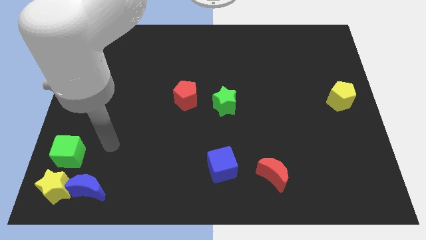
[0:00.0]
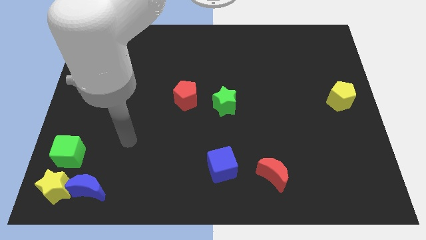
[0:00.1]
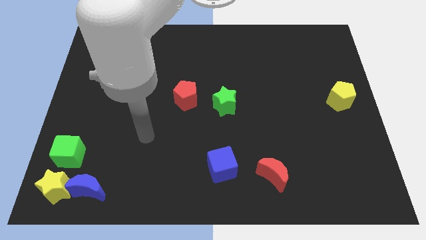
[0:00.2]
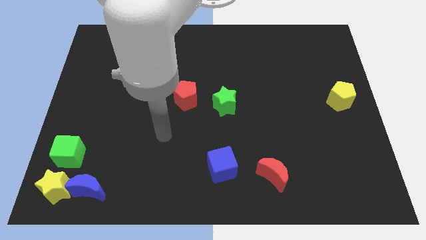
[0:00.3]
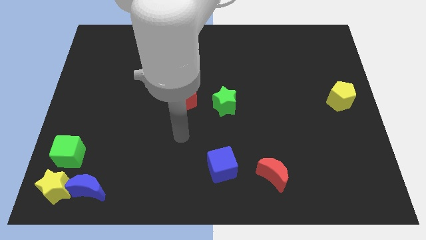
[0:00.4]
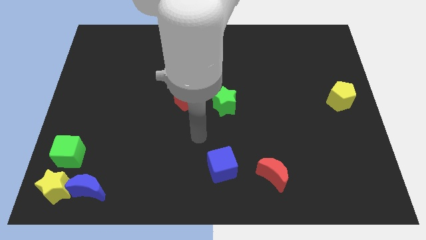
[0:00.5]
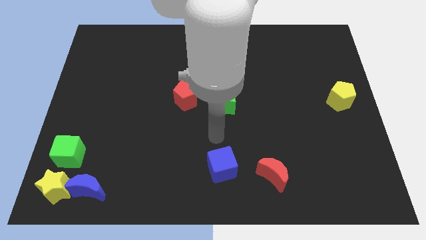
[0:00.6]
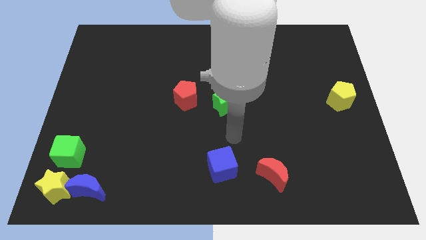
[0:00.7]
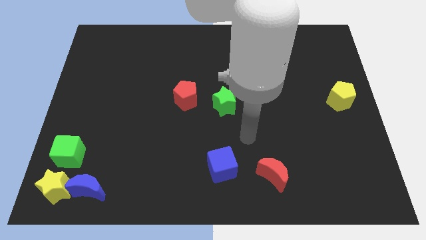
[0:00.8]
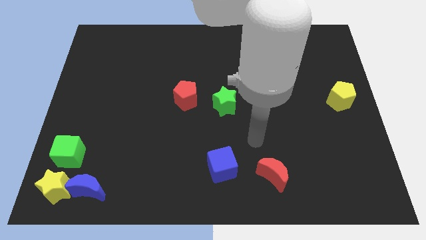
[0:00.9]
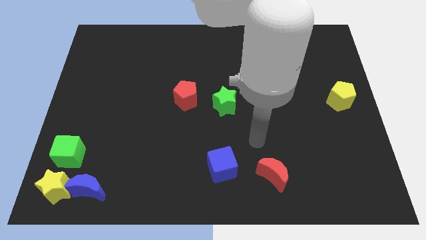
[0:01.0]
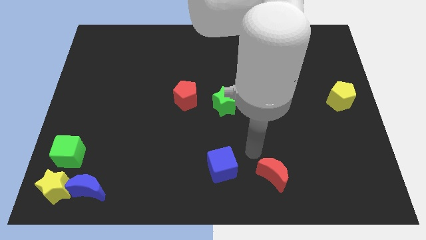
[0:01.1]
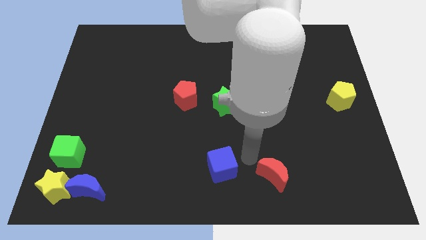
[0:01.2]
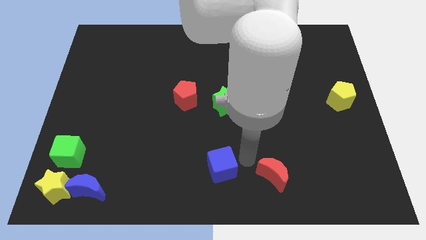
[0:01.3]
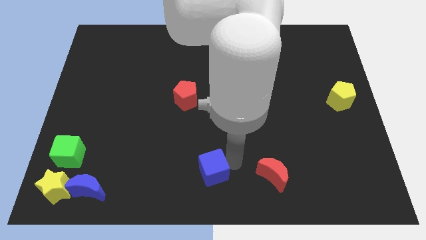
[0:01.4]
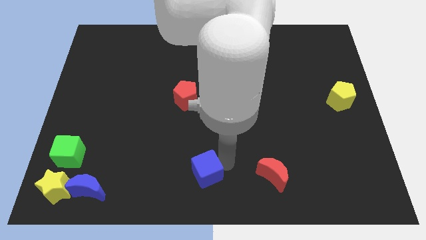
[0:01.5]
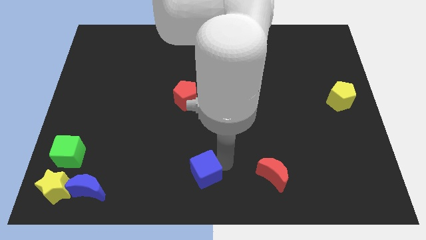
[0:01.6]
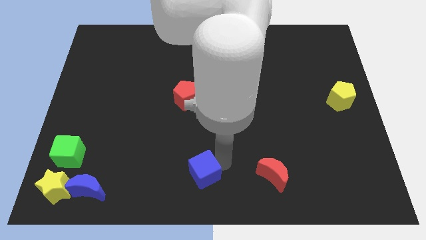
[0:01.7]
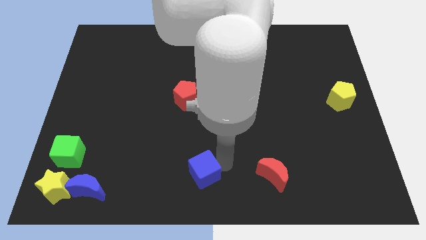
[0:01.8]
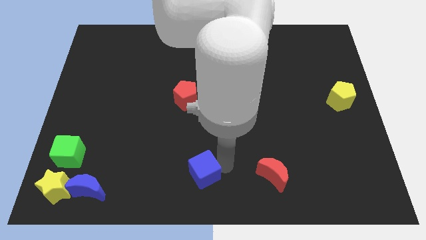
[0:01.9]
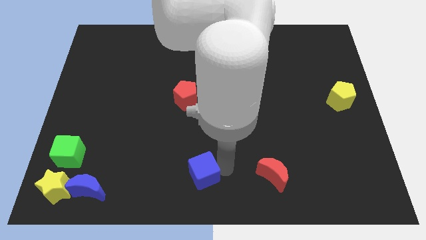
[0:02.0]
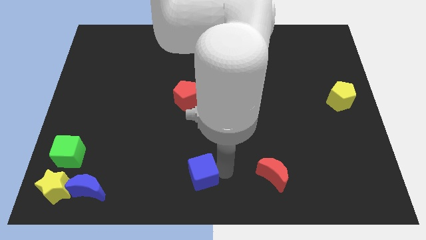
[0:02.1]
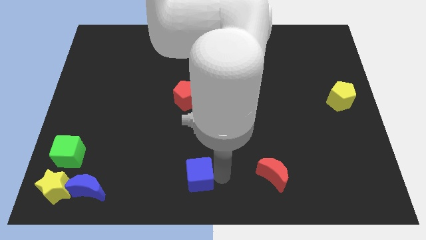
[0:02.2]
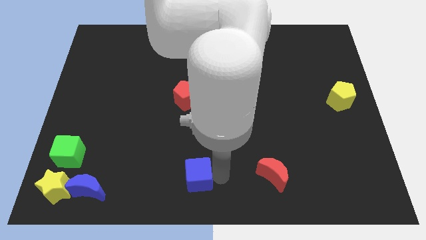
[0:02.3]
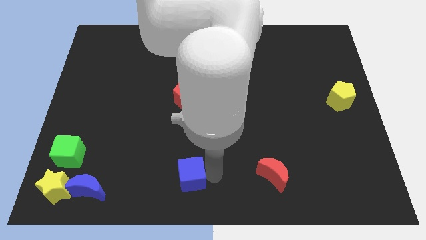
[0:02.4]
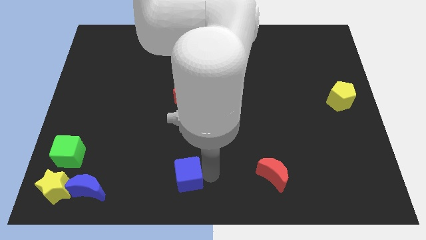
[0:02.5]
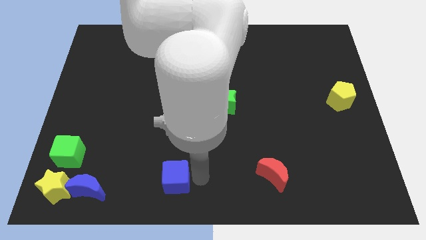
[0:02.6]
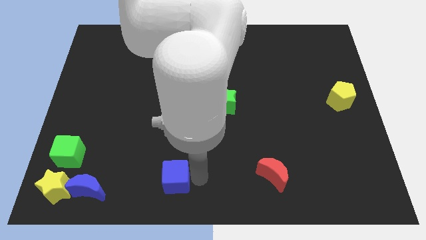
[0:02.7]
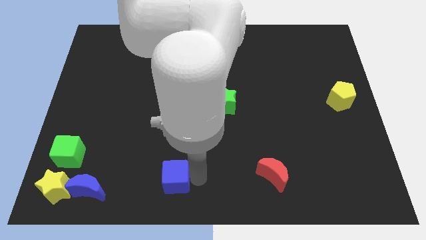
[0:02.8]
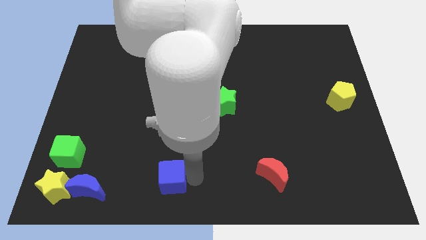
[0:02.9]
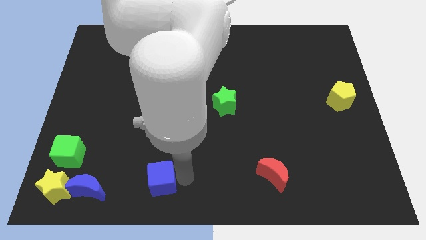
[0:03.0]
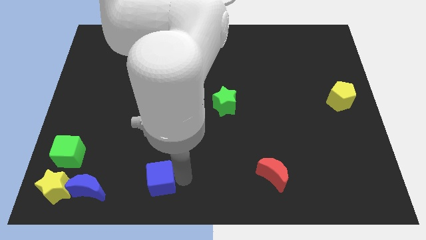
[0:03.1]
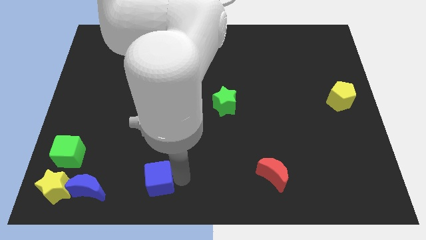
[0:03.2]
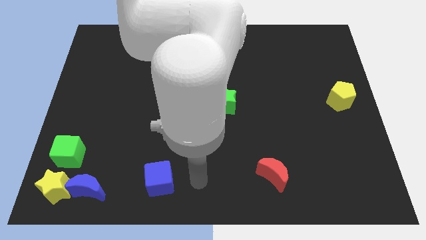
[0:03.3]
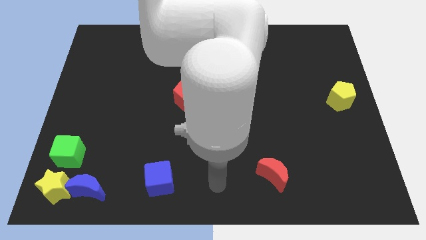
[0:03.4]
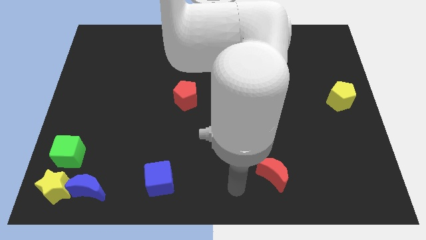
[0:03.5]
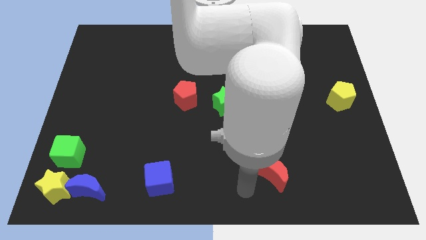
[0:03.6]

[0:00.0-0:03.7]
move the blue cube away from the red crescent

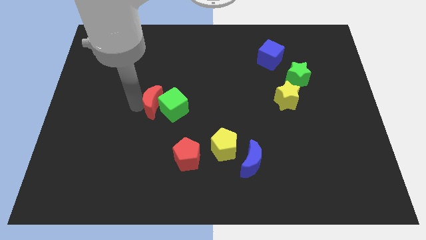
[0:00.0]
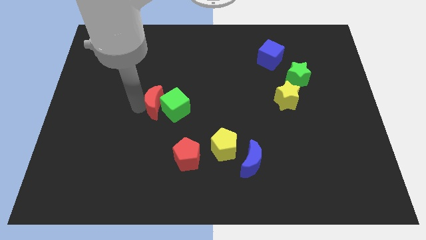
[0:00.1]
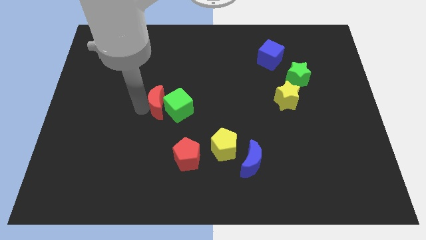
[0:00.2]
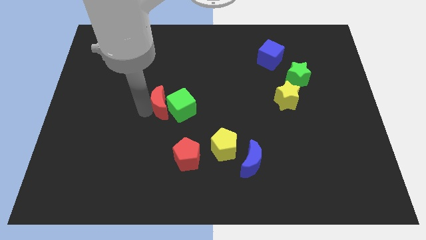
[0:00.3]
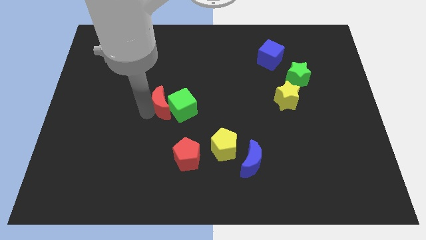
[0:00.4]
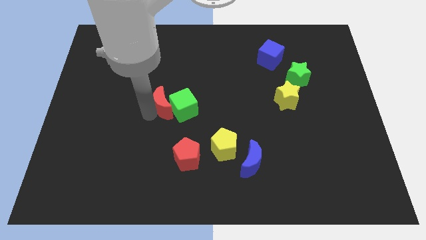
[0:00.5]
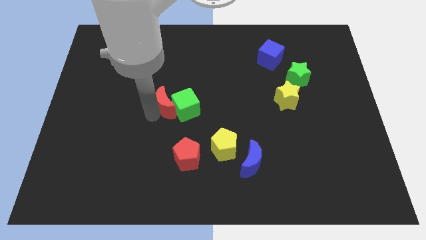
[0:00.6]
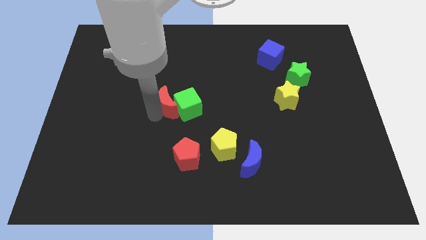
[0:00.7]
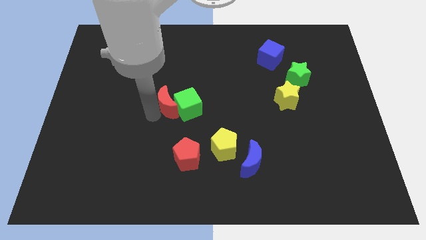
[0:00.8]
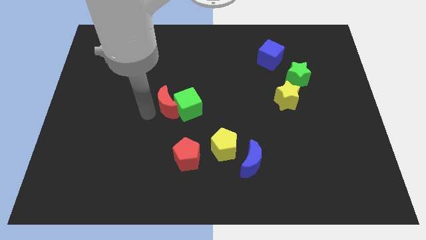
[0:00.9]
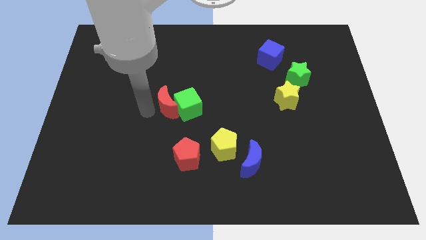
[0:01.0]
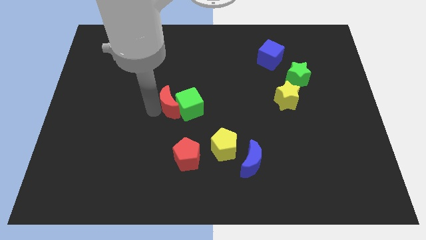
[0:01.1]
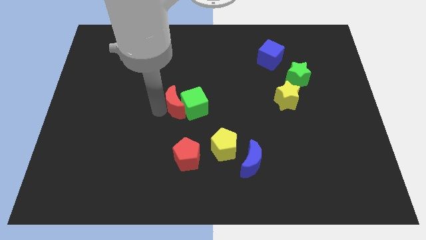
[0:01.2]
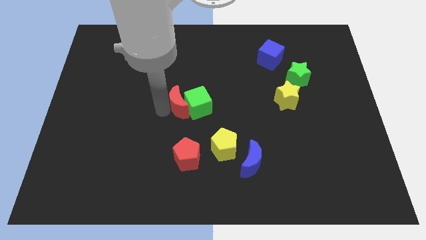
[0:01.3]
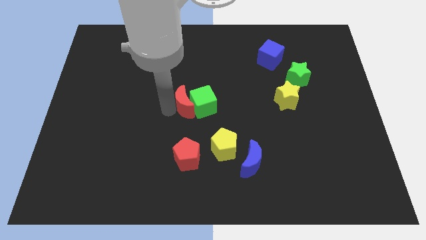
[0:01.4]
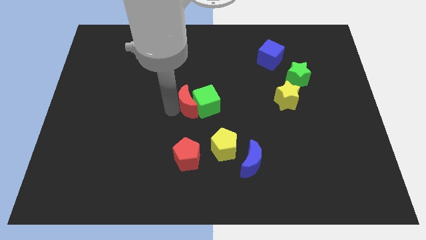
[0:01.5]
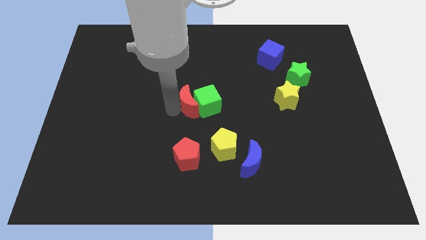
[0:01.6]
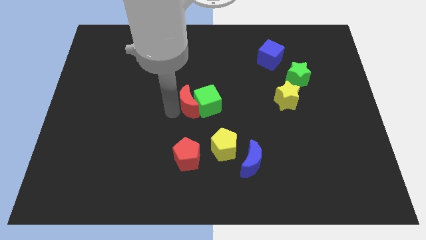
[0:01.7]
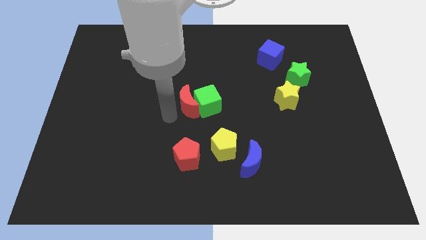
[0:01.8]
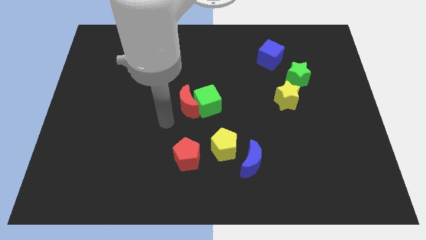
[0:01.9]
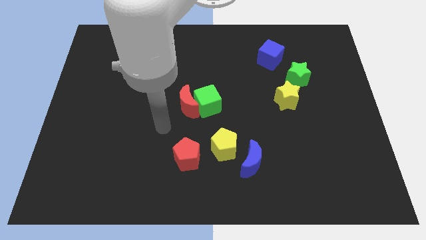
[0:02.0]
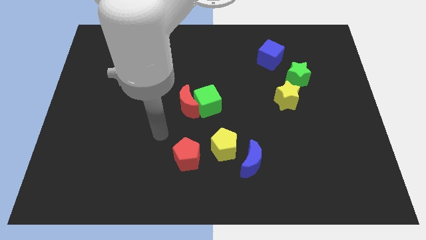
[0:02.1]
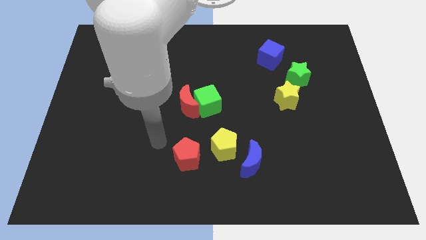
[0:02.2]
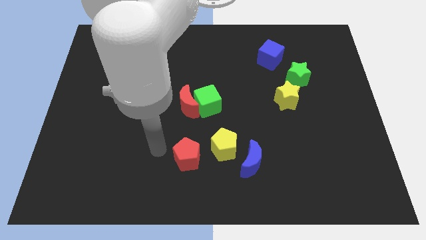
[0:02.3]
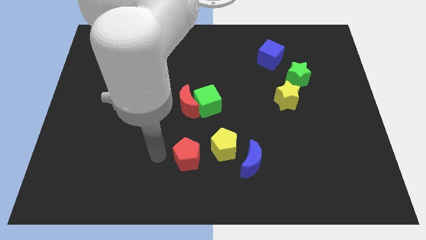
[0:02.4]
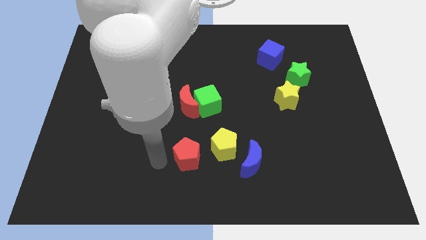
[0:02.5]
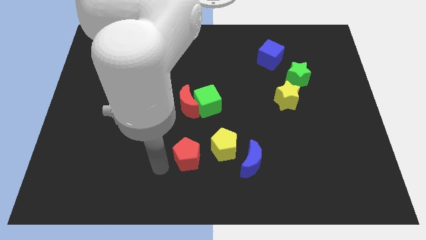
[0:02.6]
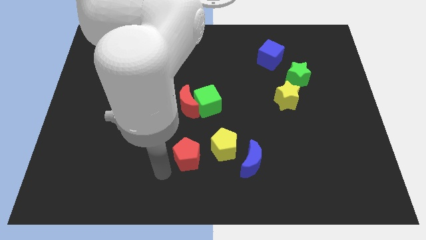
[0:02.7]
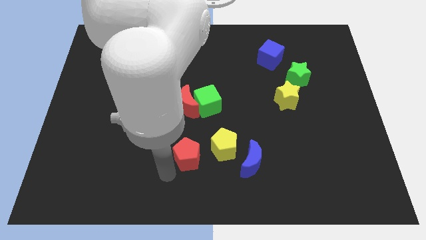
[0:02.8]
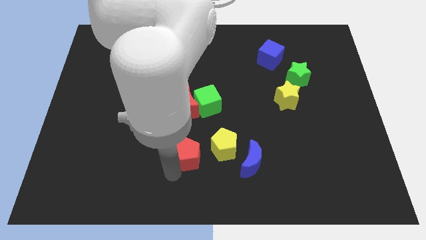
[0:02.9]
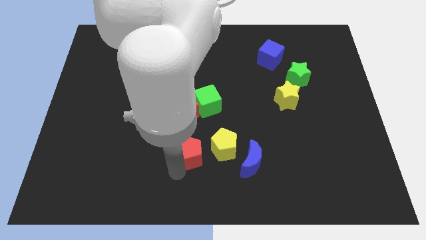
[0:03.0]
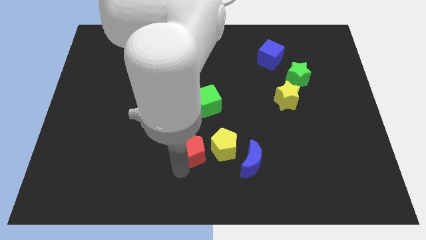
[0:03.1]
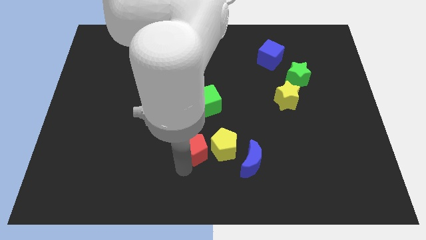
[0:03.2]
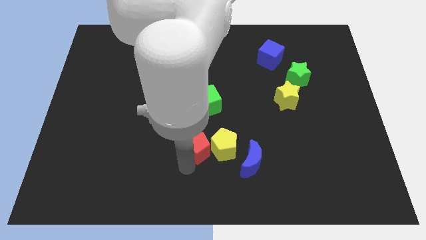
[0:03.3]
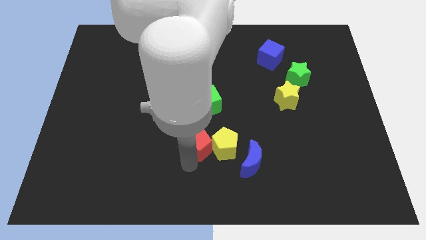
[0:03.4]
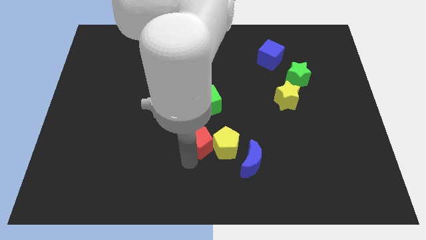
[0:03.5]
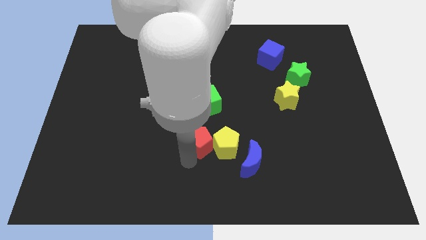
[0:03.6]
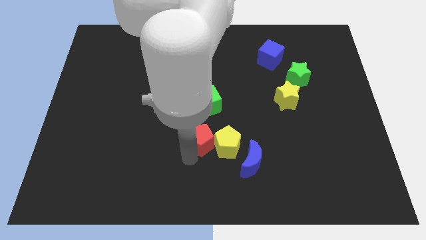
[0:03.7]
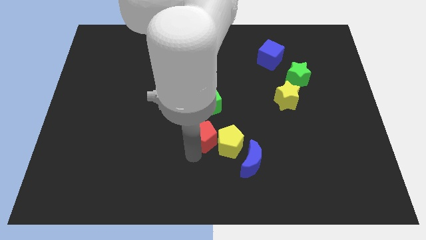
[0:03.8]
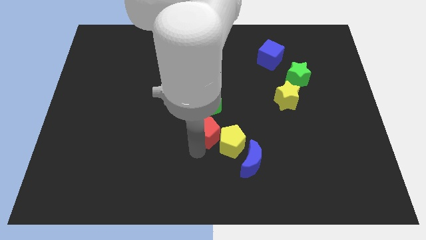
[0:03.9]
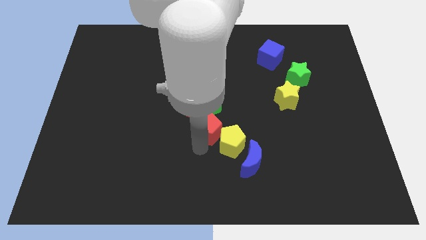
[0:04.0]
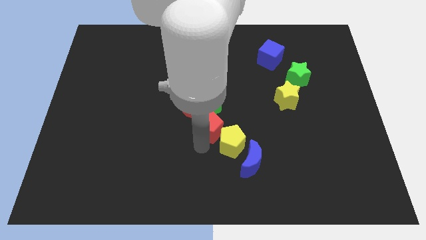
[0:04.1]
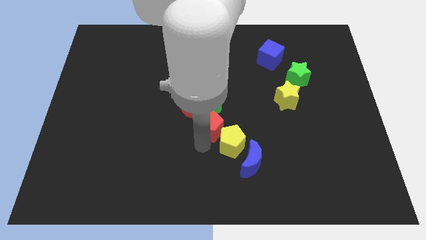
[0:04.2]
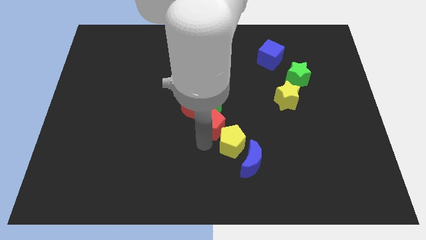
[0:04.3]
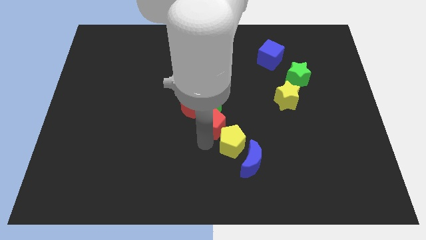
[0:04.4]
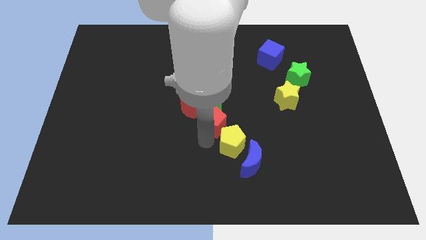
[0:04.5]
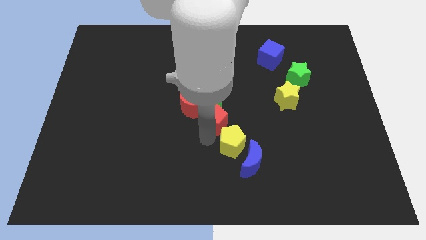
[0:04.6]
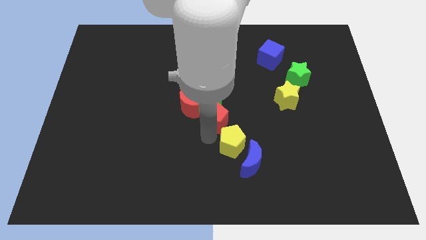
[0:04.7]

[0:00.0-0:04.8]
push the red moon green cube and red pentagon towards center

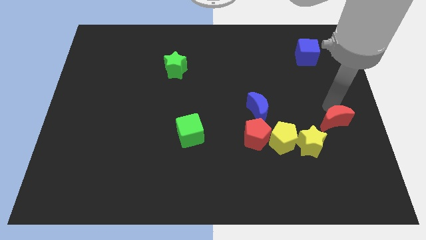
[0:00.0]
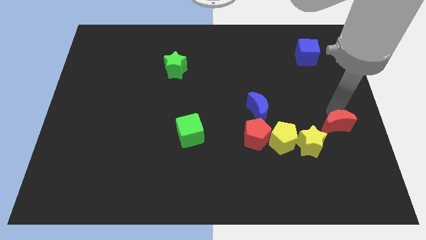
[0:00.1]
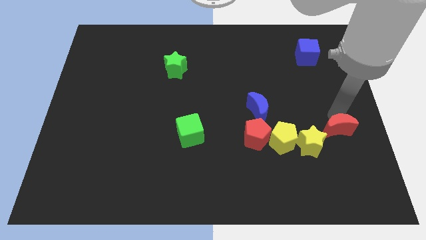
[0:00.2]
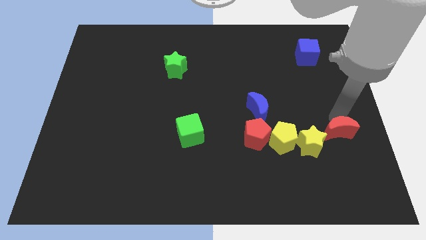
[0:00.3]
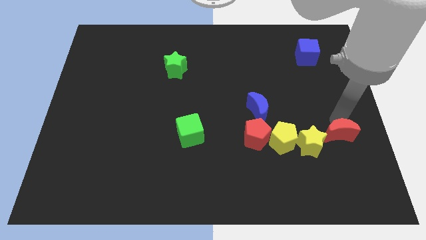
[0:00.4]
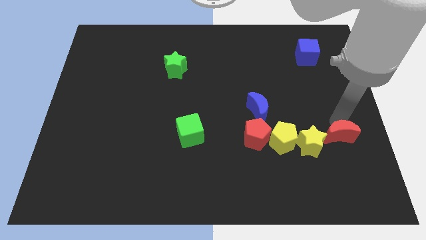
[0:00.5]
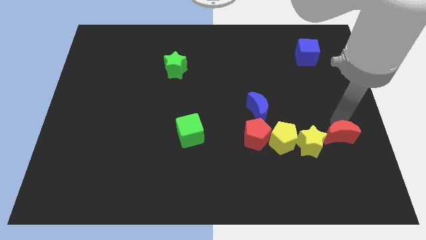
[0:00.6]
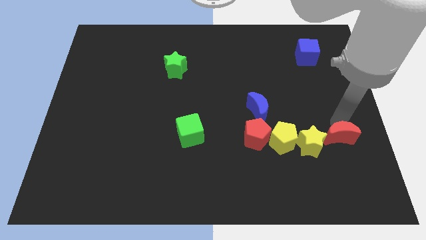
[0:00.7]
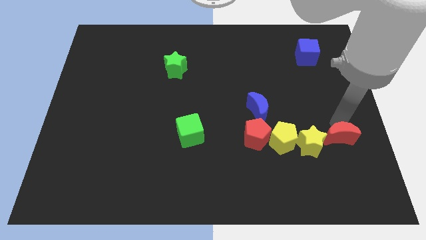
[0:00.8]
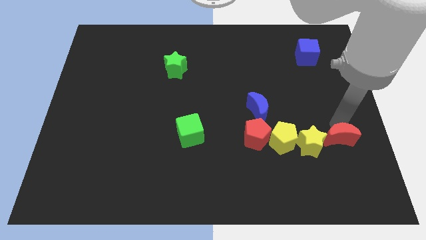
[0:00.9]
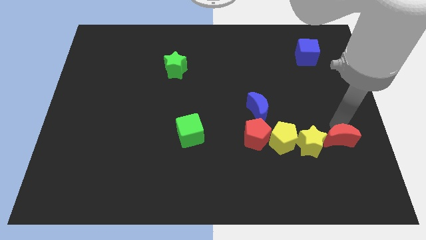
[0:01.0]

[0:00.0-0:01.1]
push the red crescent to the right of the yellow star
